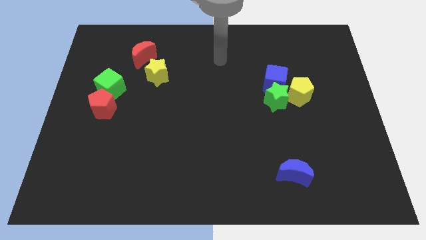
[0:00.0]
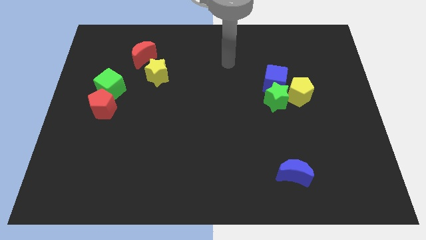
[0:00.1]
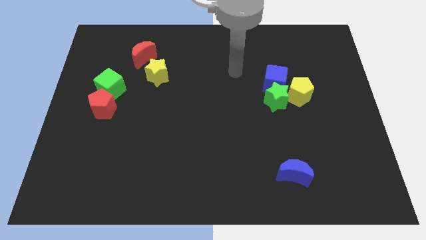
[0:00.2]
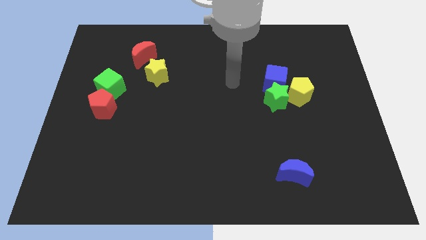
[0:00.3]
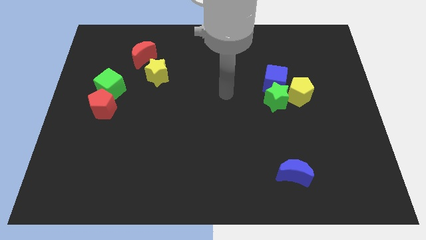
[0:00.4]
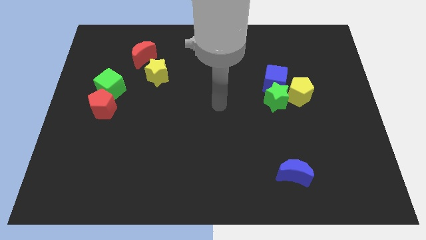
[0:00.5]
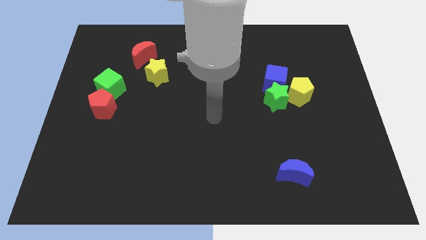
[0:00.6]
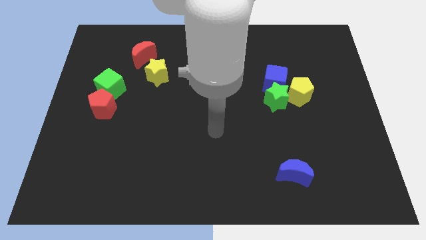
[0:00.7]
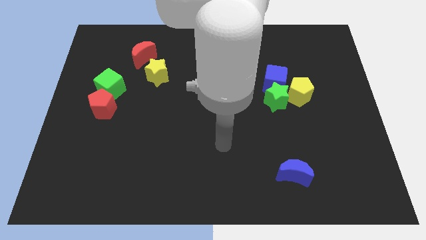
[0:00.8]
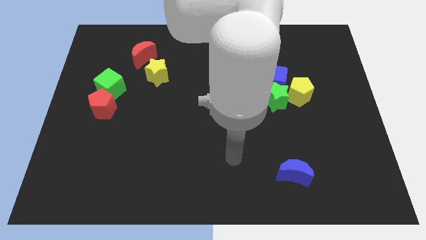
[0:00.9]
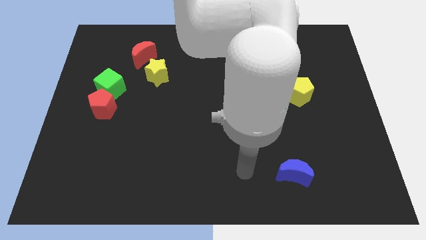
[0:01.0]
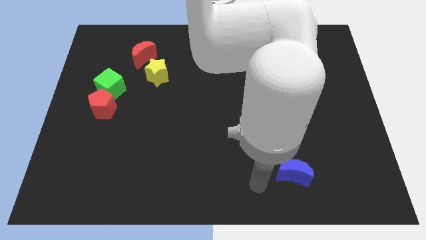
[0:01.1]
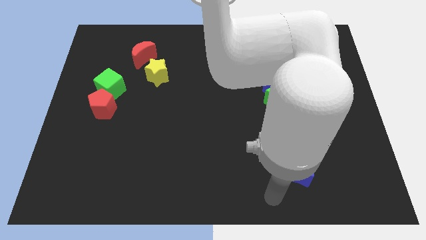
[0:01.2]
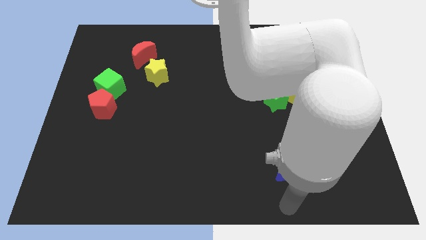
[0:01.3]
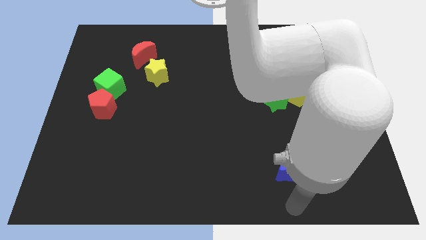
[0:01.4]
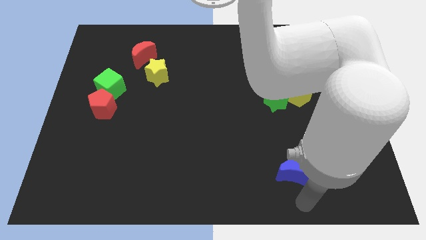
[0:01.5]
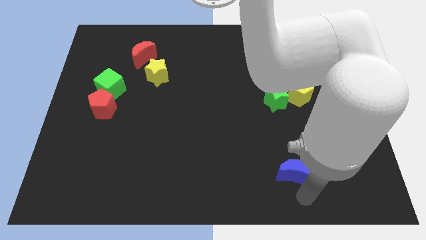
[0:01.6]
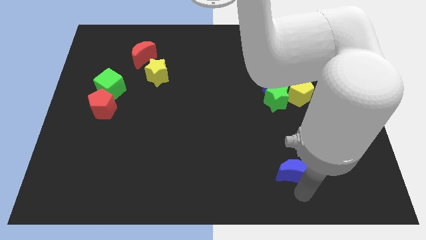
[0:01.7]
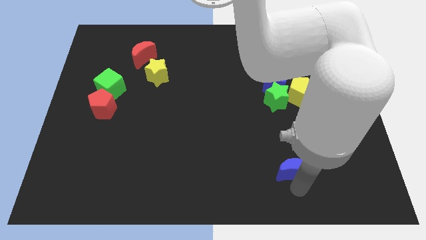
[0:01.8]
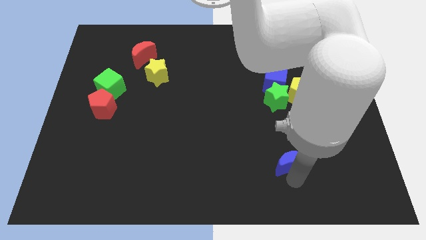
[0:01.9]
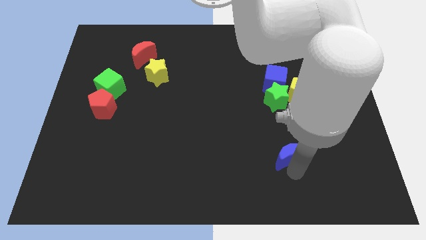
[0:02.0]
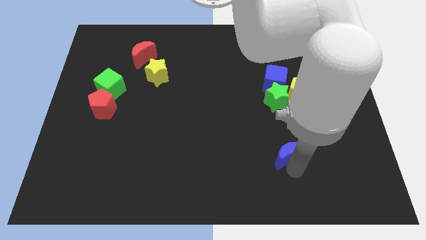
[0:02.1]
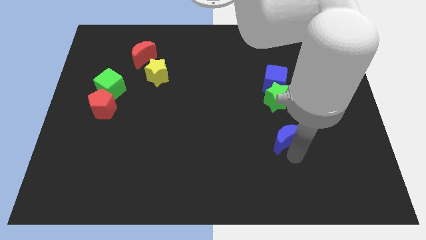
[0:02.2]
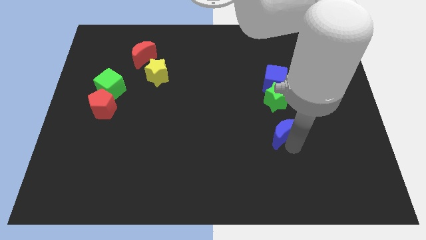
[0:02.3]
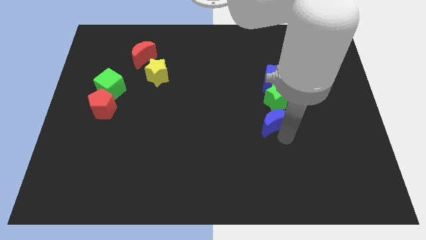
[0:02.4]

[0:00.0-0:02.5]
push the blue crescent towards the top

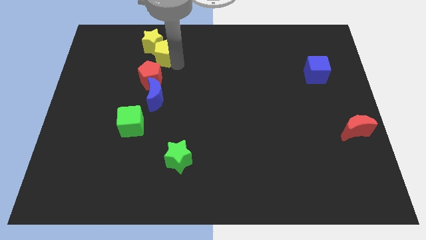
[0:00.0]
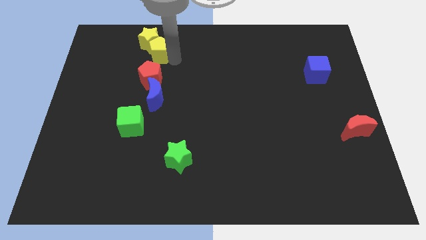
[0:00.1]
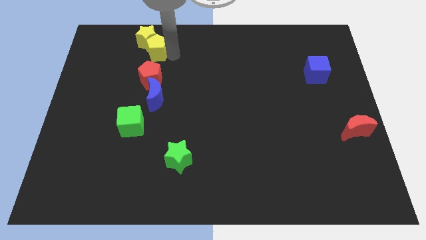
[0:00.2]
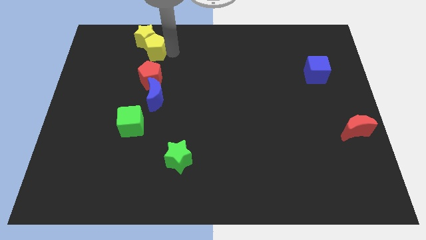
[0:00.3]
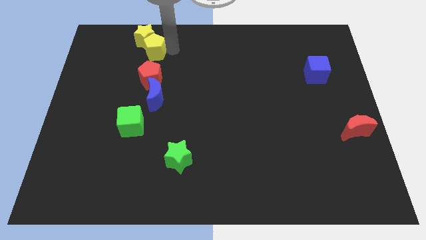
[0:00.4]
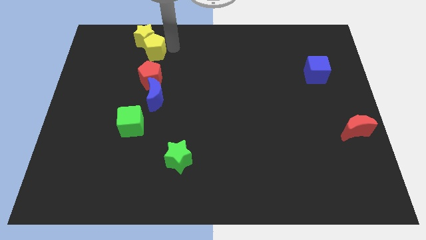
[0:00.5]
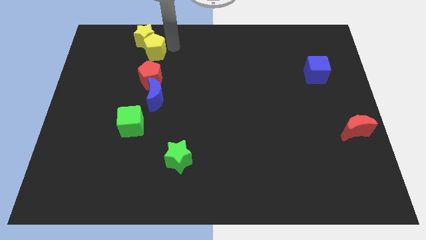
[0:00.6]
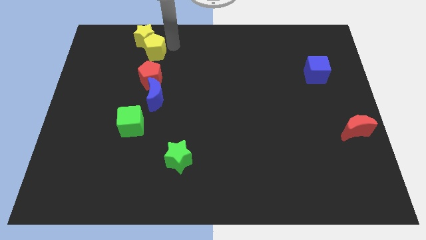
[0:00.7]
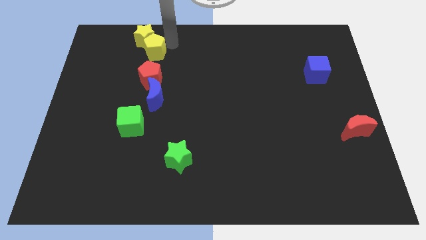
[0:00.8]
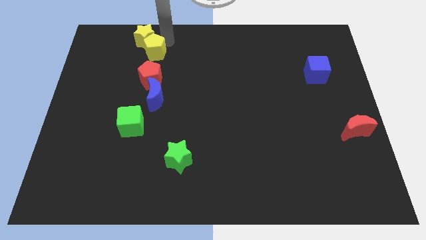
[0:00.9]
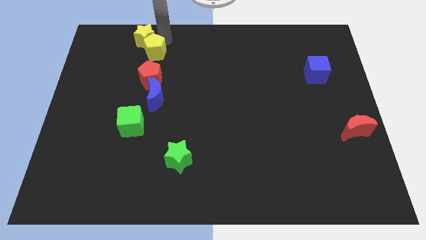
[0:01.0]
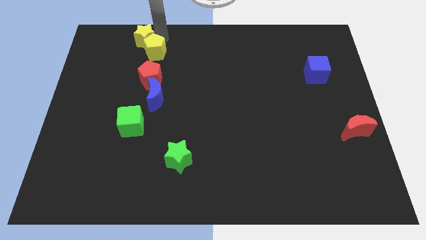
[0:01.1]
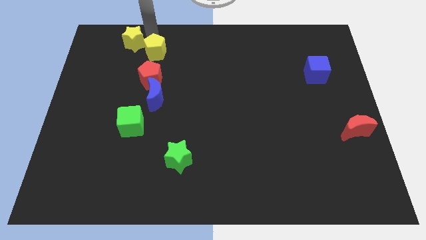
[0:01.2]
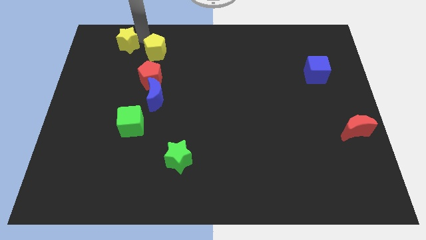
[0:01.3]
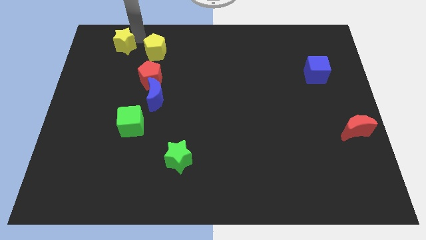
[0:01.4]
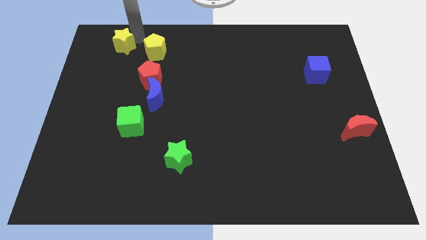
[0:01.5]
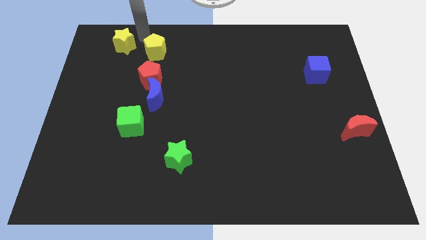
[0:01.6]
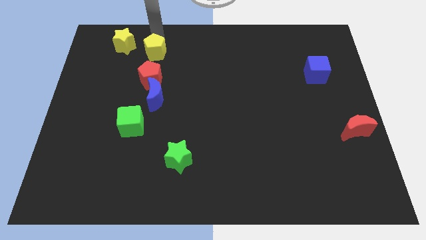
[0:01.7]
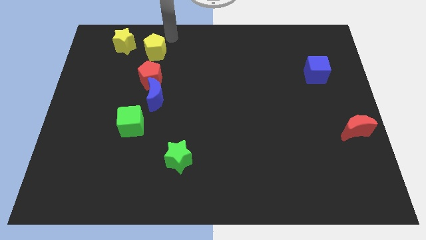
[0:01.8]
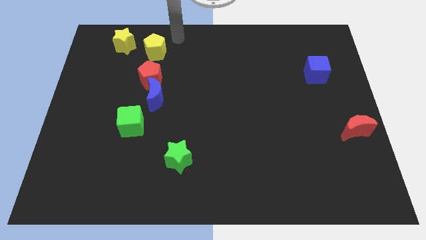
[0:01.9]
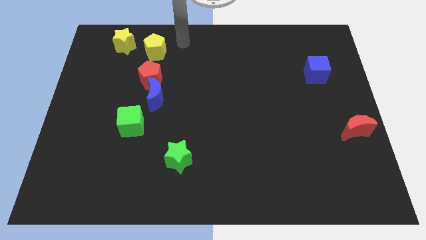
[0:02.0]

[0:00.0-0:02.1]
separate the yellow star and yellow pentagon

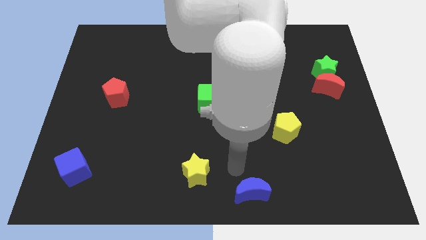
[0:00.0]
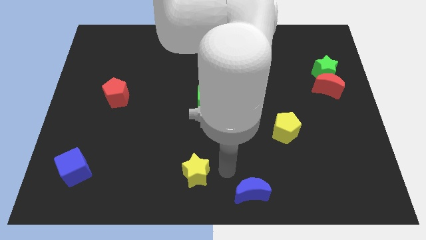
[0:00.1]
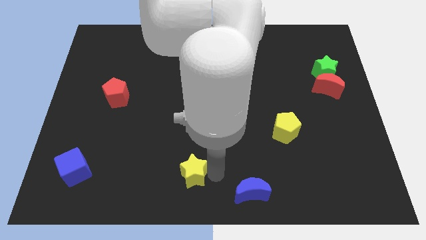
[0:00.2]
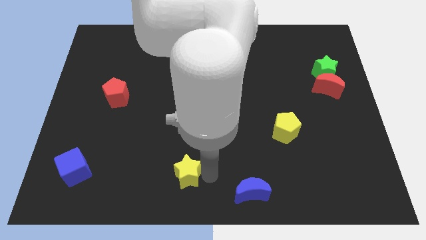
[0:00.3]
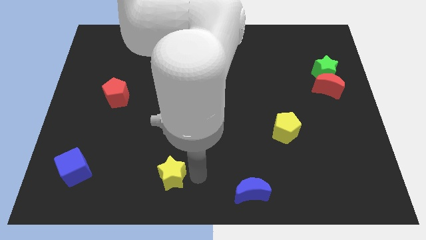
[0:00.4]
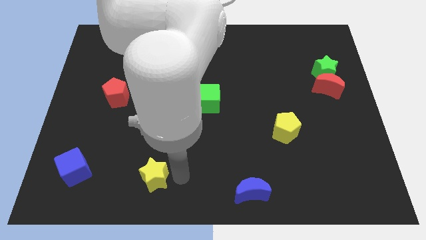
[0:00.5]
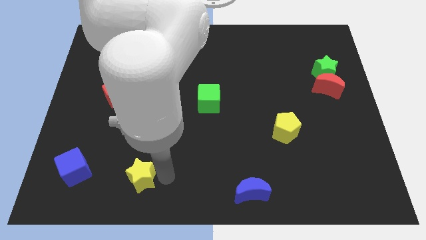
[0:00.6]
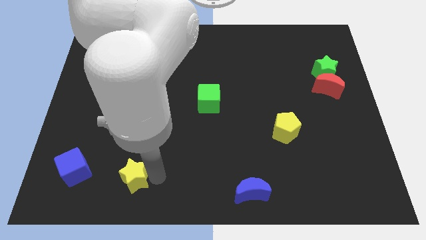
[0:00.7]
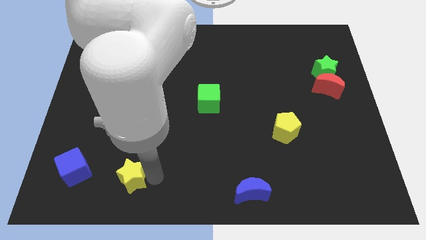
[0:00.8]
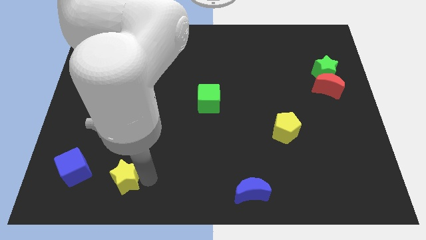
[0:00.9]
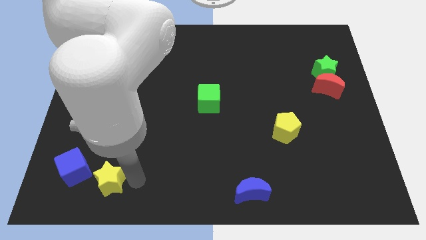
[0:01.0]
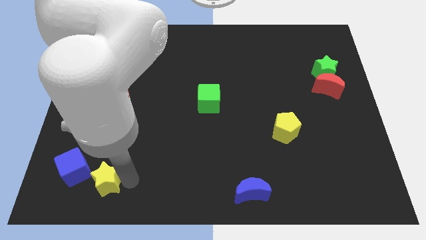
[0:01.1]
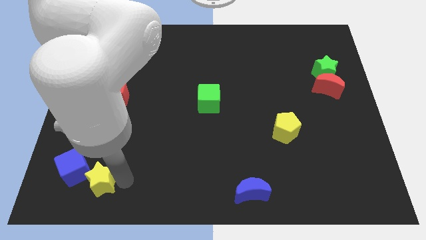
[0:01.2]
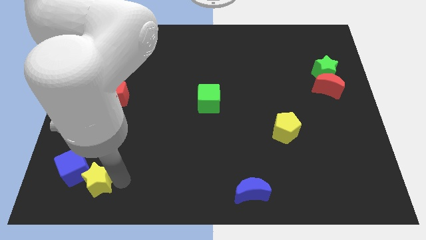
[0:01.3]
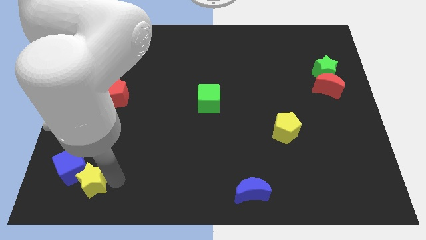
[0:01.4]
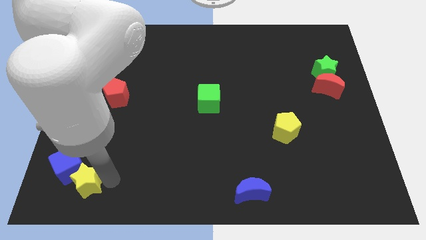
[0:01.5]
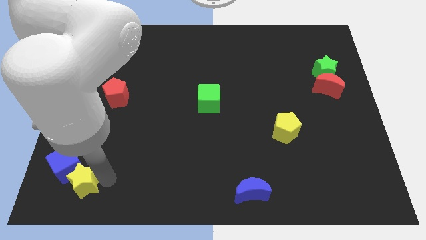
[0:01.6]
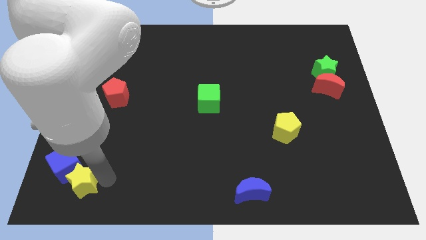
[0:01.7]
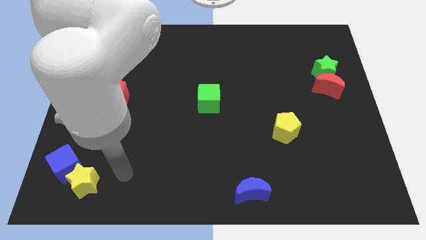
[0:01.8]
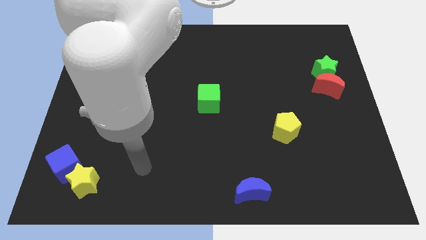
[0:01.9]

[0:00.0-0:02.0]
push the yellow star into the blue cube

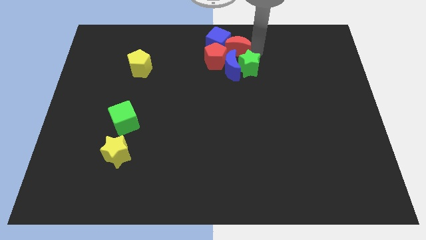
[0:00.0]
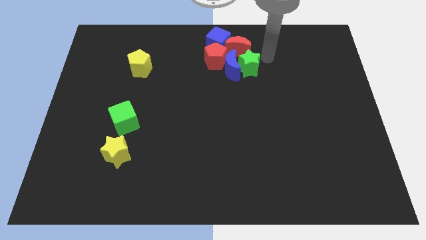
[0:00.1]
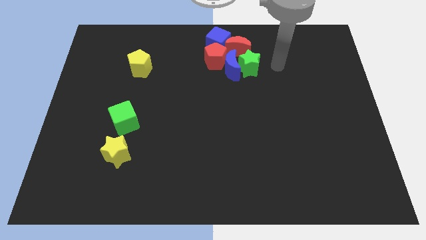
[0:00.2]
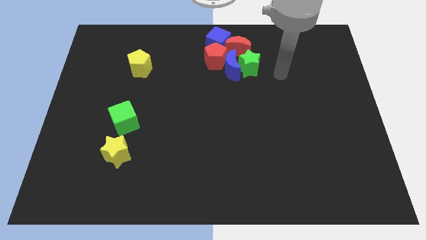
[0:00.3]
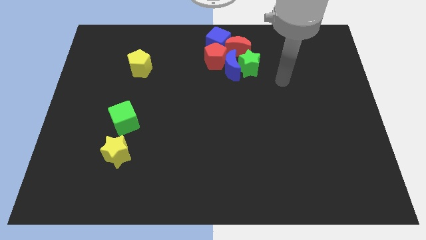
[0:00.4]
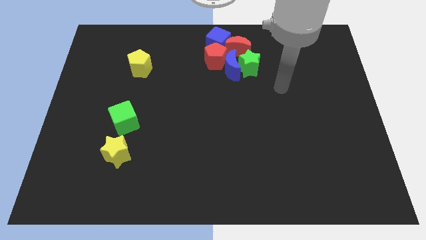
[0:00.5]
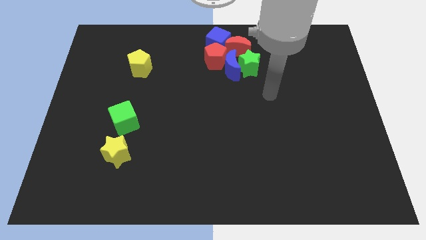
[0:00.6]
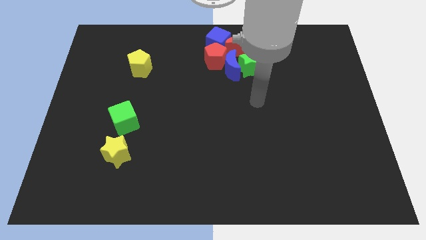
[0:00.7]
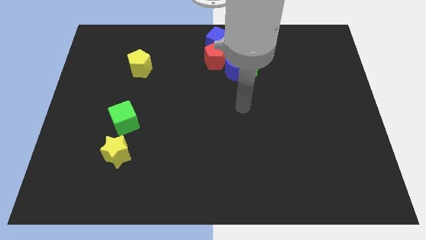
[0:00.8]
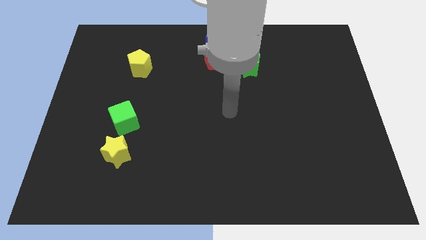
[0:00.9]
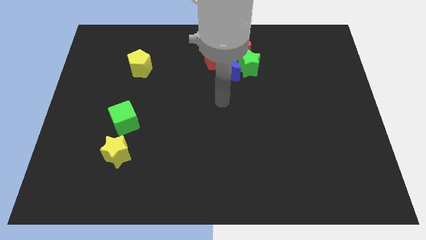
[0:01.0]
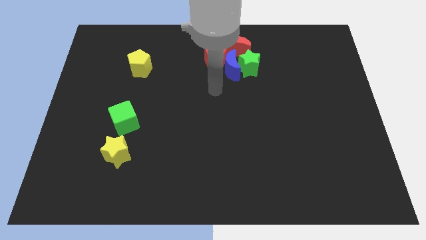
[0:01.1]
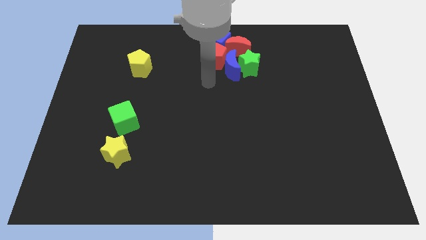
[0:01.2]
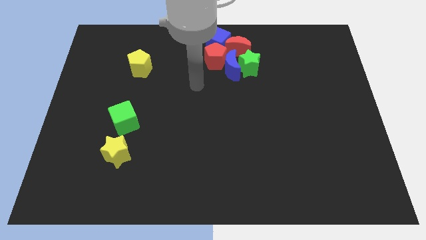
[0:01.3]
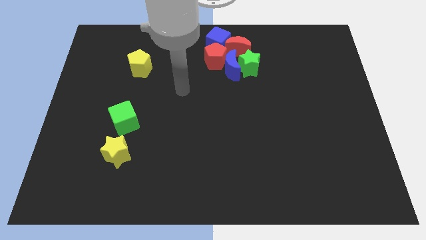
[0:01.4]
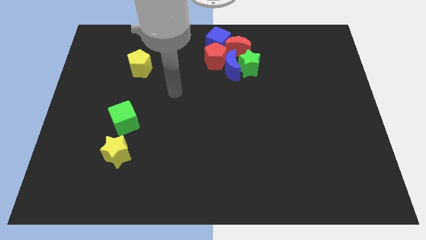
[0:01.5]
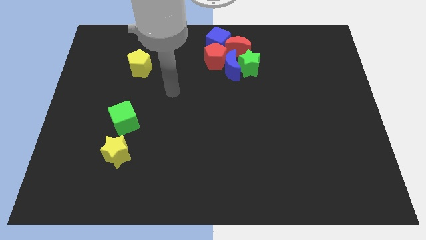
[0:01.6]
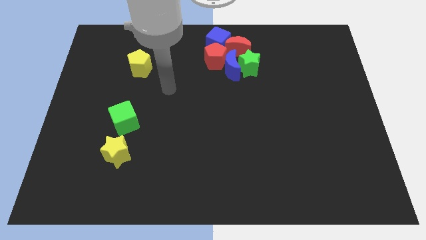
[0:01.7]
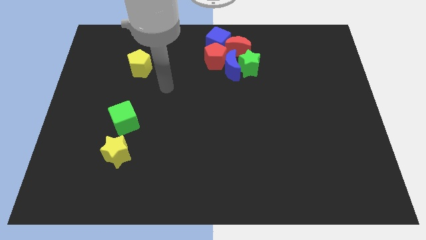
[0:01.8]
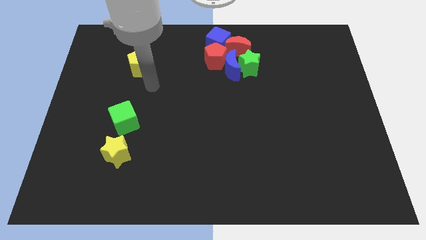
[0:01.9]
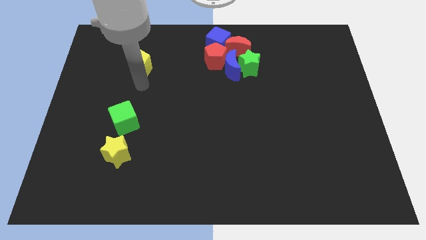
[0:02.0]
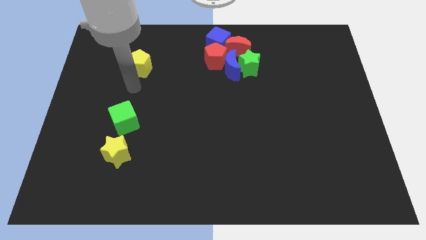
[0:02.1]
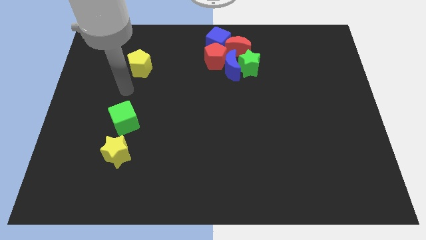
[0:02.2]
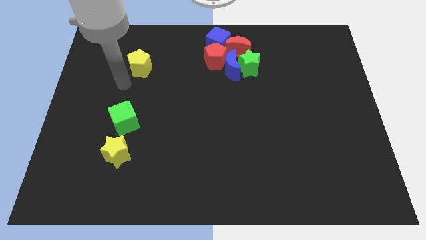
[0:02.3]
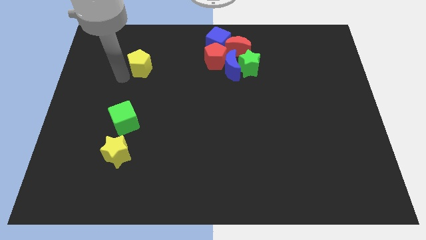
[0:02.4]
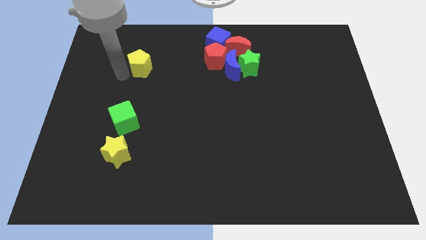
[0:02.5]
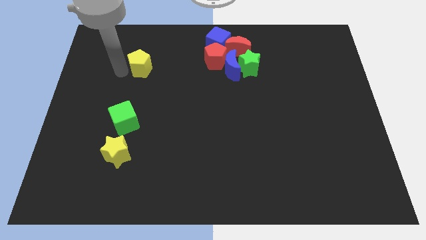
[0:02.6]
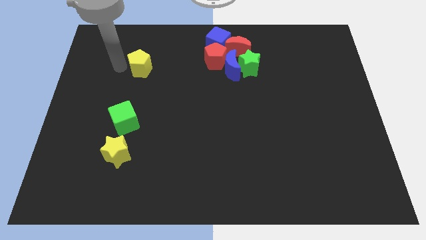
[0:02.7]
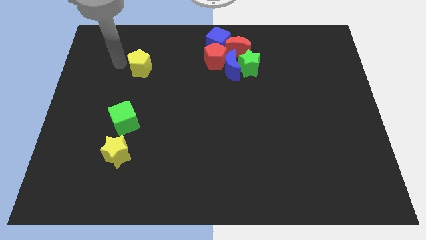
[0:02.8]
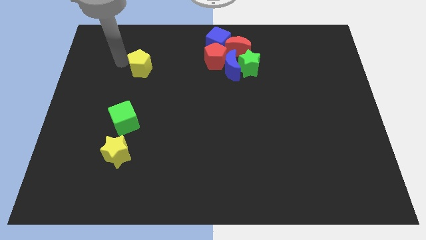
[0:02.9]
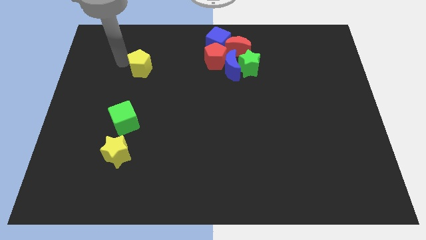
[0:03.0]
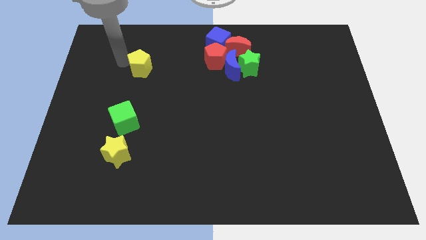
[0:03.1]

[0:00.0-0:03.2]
place the arm left to the yellow pentagon
